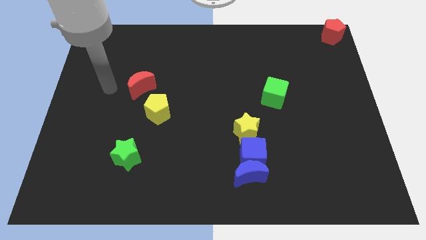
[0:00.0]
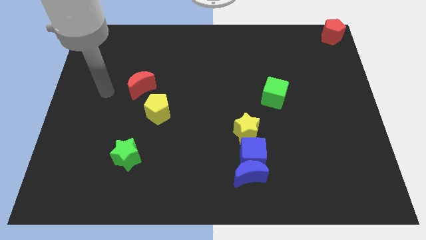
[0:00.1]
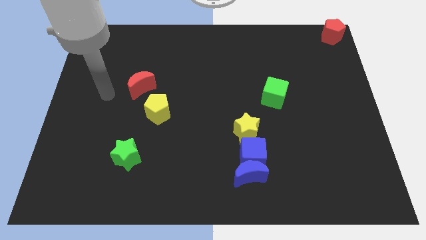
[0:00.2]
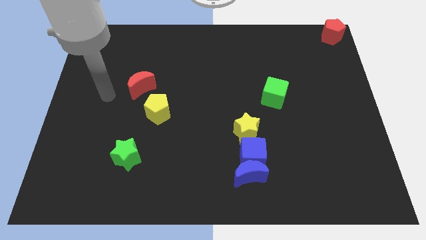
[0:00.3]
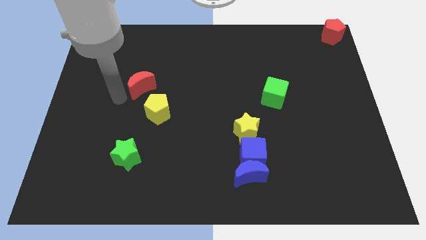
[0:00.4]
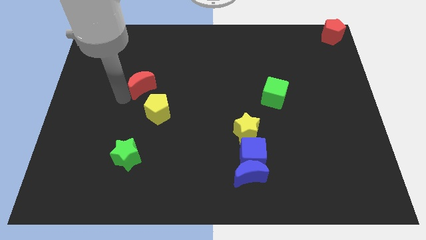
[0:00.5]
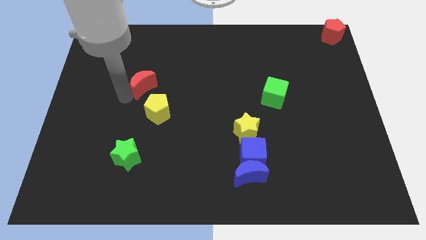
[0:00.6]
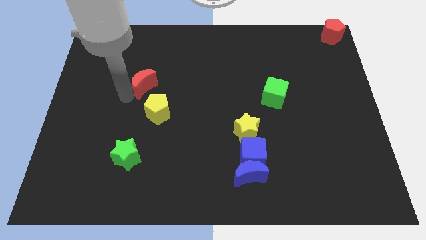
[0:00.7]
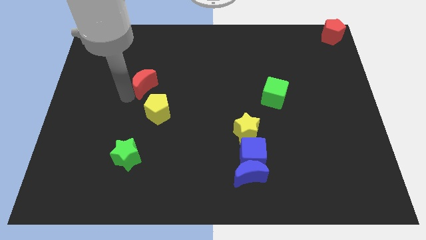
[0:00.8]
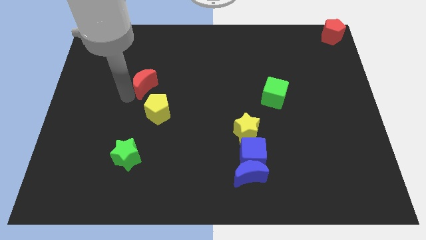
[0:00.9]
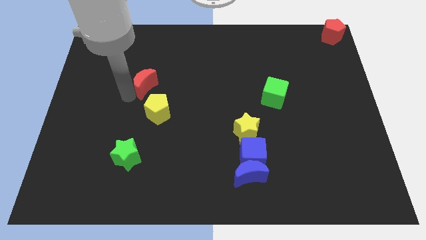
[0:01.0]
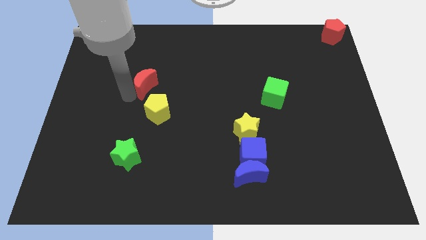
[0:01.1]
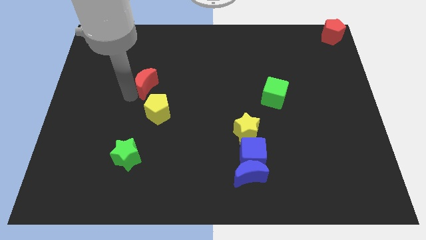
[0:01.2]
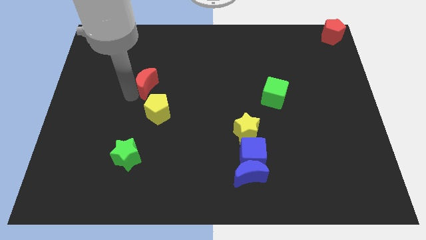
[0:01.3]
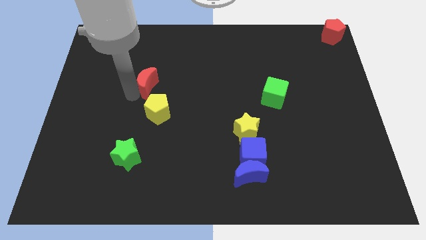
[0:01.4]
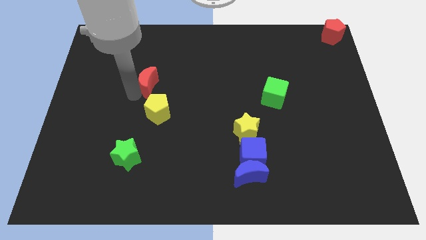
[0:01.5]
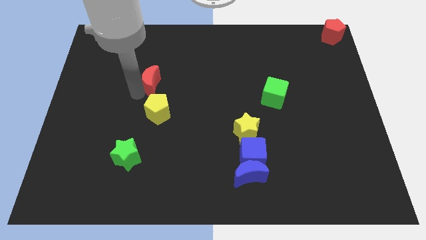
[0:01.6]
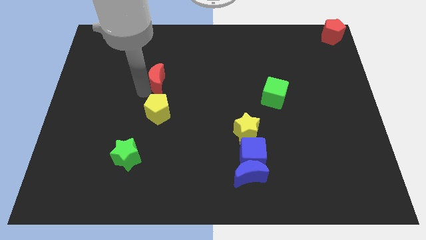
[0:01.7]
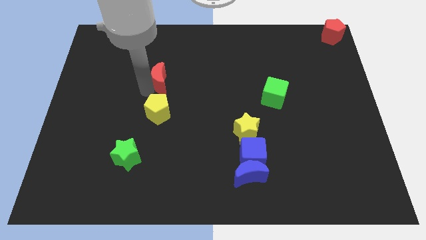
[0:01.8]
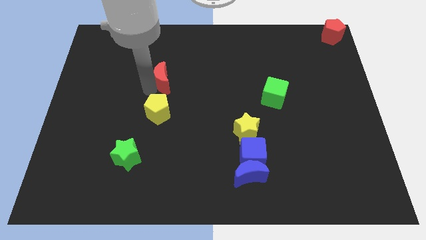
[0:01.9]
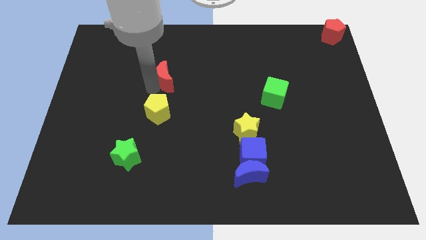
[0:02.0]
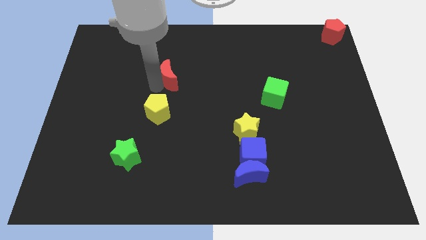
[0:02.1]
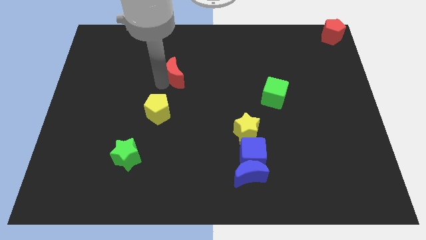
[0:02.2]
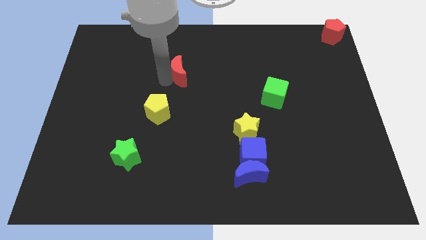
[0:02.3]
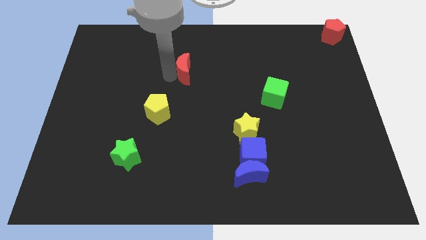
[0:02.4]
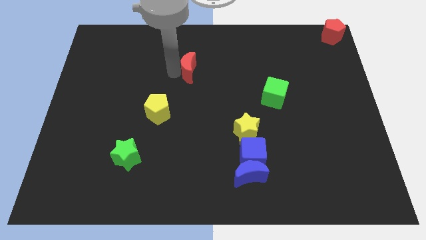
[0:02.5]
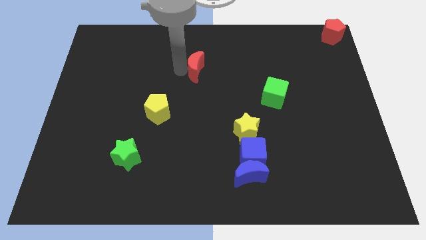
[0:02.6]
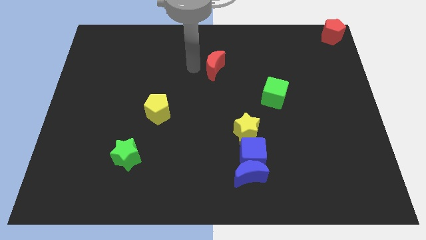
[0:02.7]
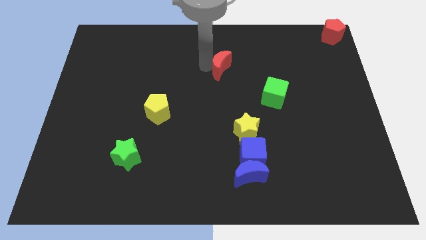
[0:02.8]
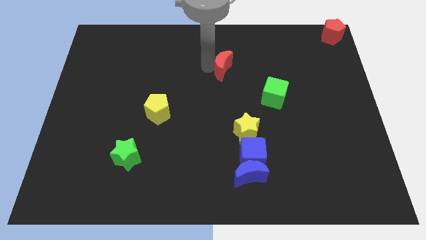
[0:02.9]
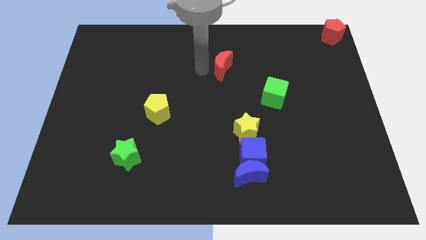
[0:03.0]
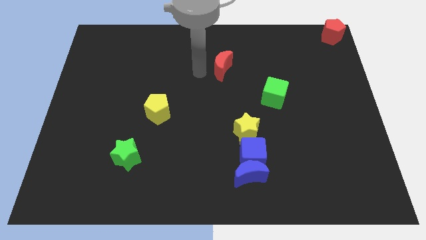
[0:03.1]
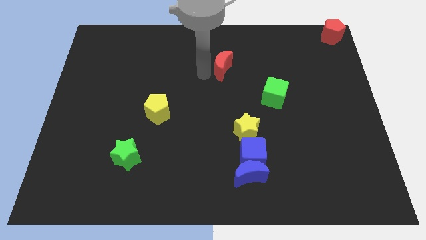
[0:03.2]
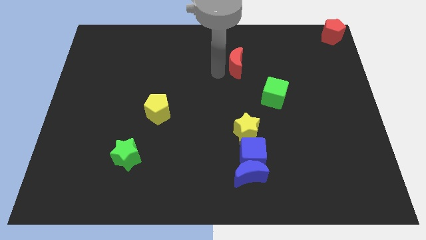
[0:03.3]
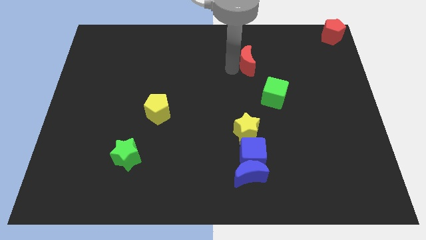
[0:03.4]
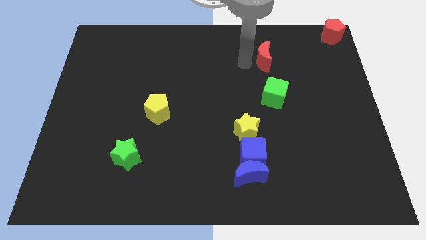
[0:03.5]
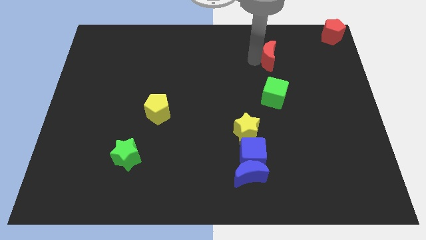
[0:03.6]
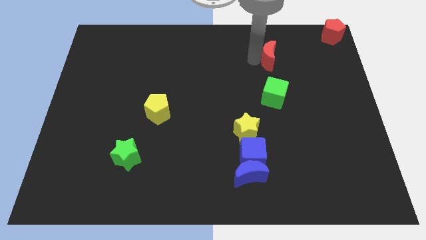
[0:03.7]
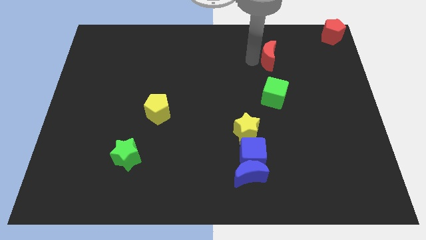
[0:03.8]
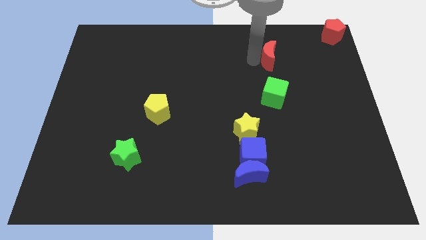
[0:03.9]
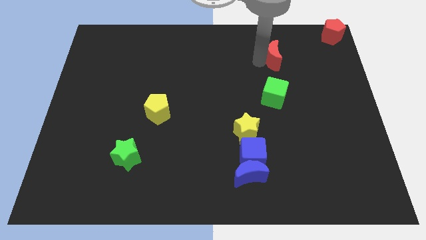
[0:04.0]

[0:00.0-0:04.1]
move the red moon above the green cube

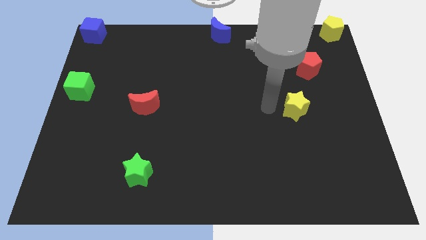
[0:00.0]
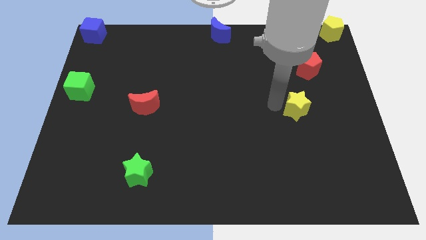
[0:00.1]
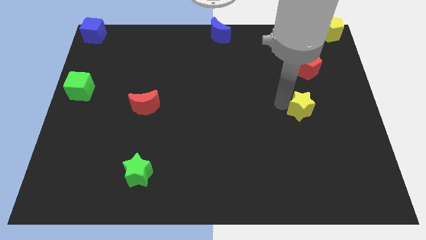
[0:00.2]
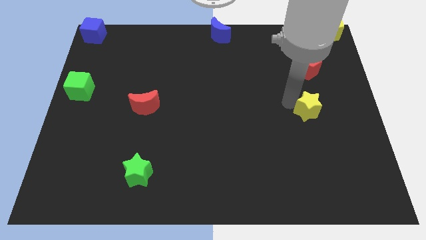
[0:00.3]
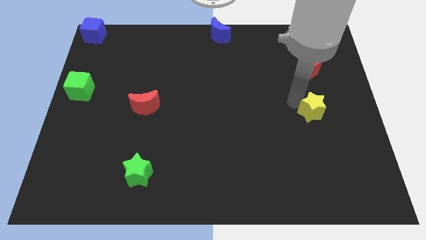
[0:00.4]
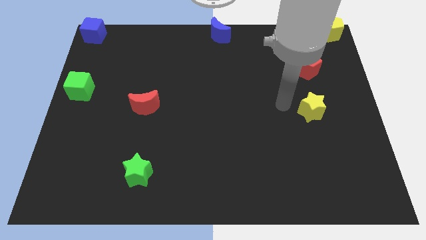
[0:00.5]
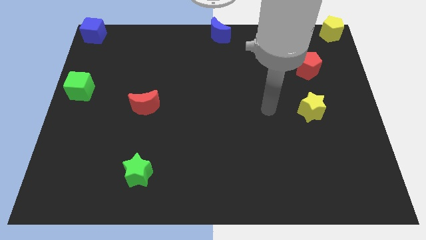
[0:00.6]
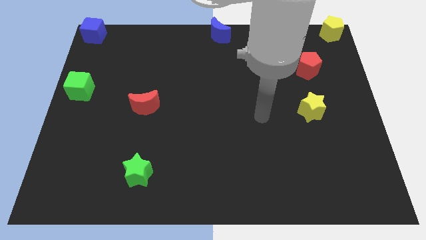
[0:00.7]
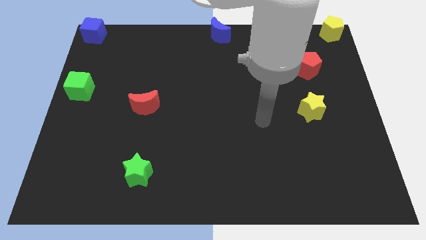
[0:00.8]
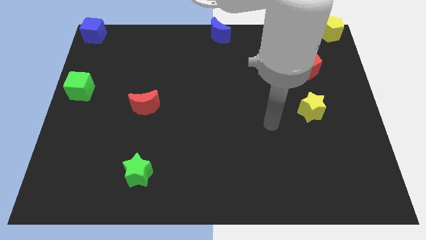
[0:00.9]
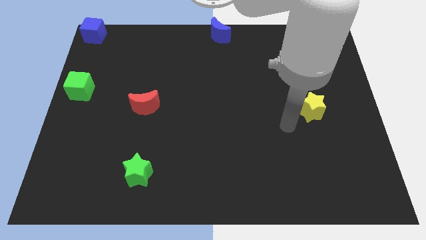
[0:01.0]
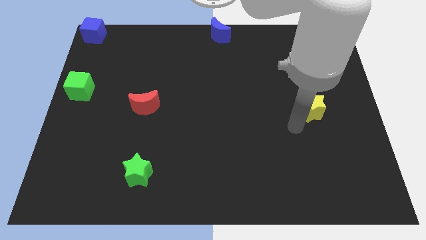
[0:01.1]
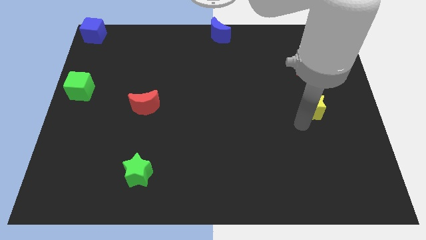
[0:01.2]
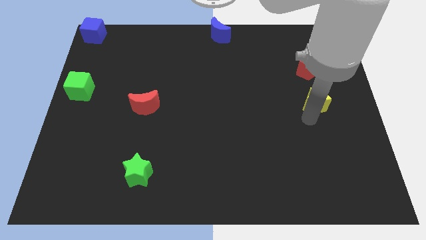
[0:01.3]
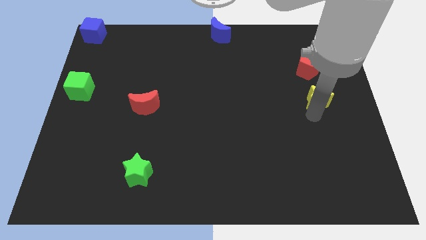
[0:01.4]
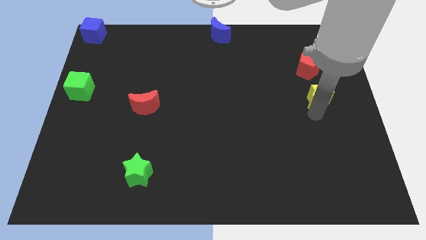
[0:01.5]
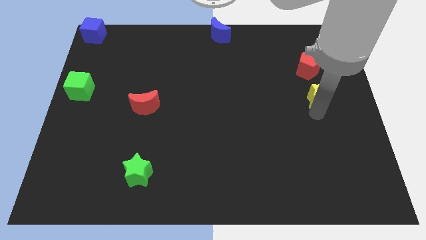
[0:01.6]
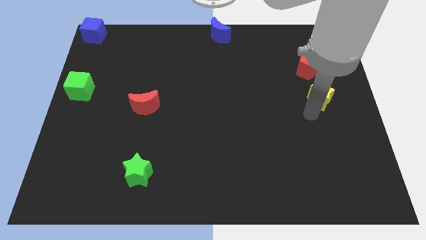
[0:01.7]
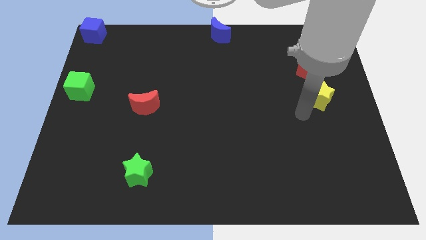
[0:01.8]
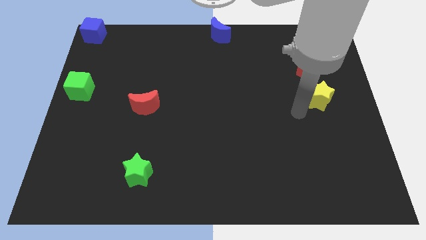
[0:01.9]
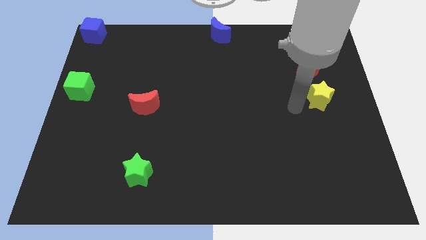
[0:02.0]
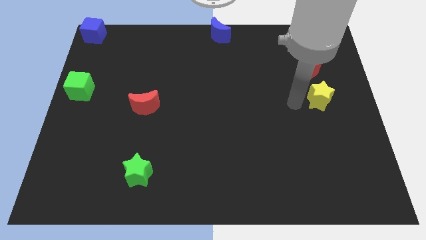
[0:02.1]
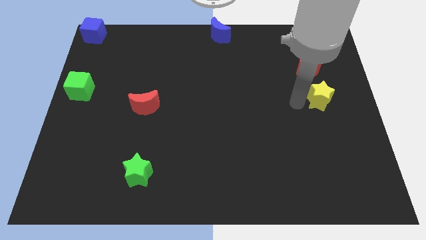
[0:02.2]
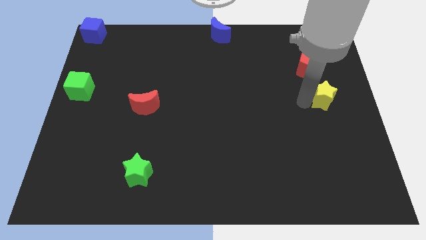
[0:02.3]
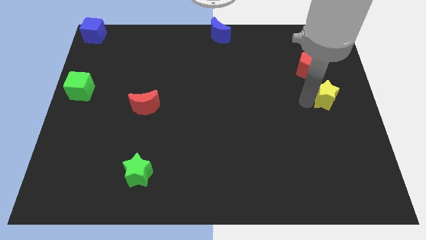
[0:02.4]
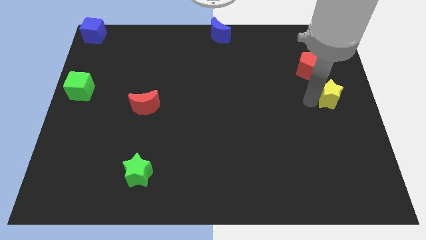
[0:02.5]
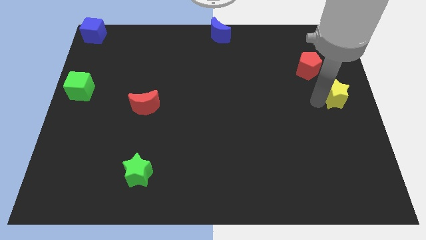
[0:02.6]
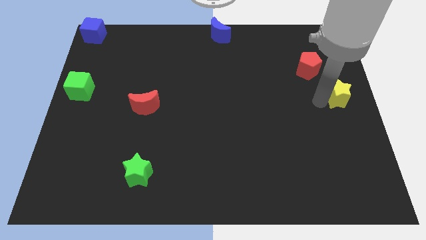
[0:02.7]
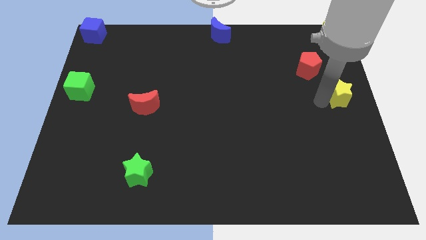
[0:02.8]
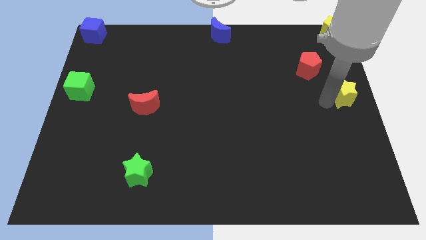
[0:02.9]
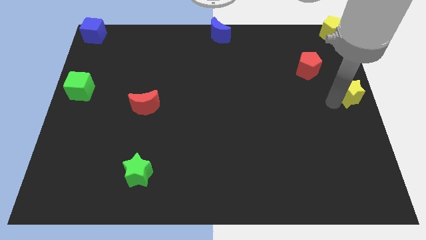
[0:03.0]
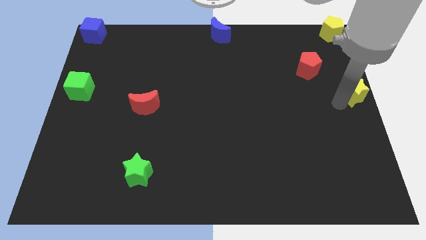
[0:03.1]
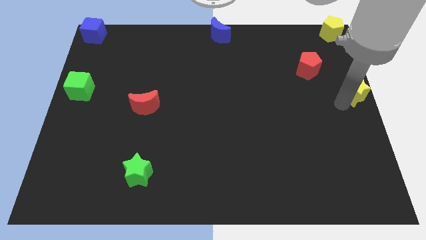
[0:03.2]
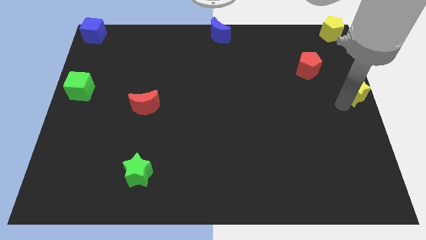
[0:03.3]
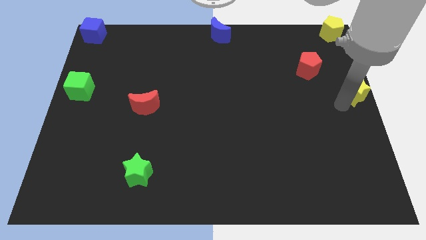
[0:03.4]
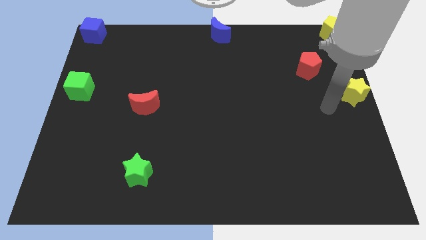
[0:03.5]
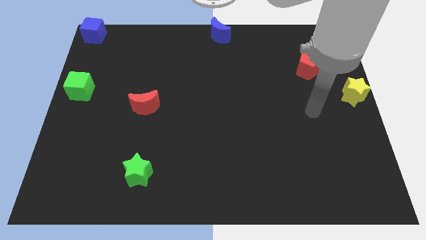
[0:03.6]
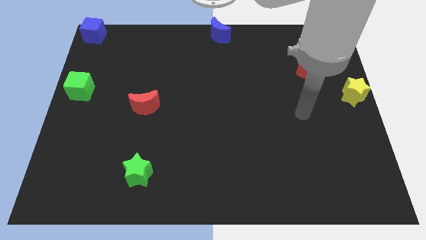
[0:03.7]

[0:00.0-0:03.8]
move the yellow star to the center right of the board

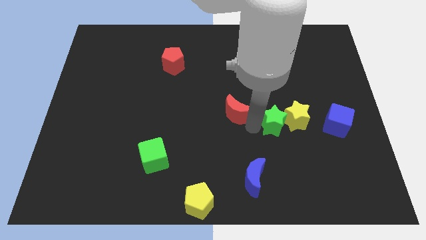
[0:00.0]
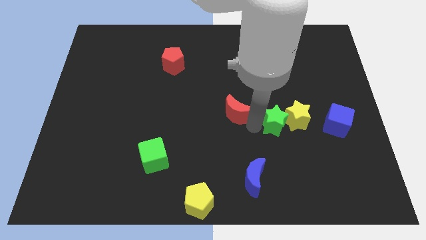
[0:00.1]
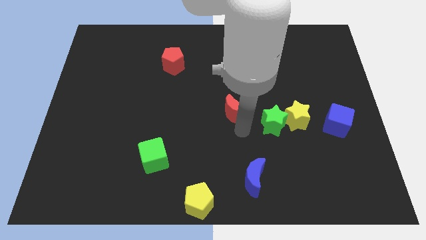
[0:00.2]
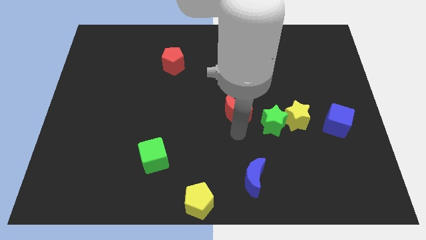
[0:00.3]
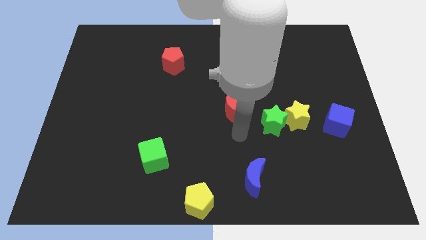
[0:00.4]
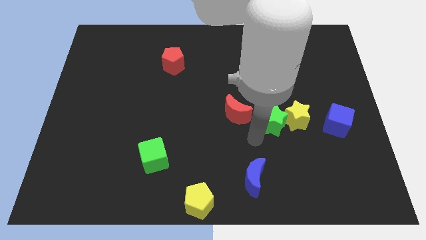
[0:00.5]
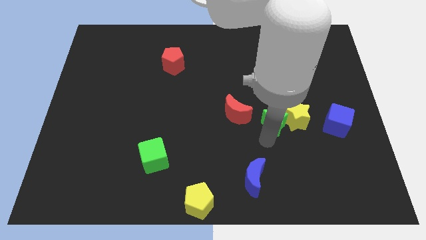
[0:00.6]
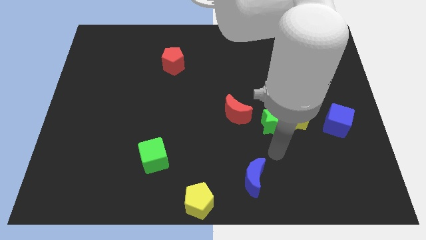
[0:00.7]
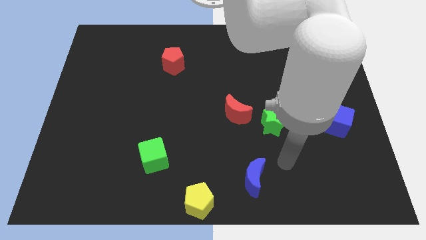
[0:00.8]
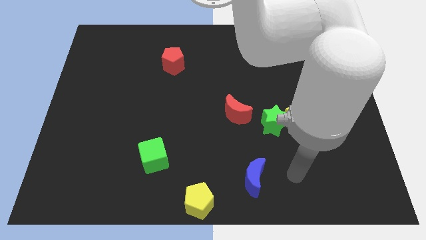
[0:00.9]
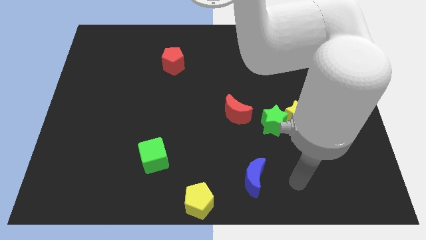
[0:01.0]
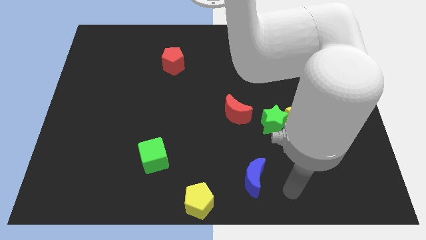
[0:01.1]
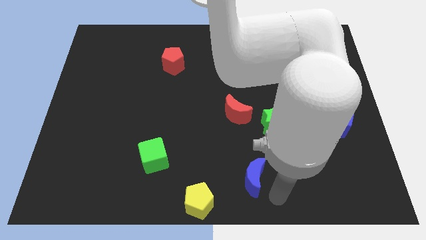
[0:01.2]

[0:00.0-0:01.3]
move your arm away from the green star
